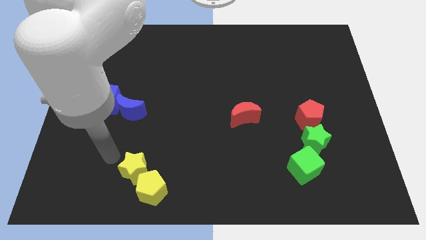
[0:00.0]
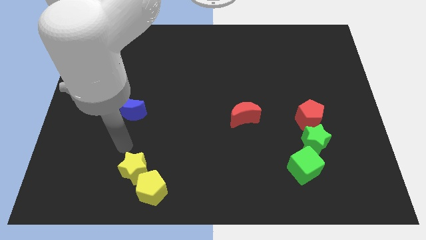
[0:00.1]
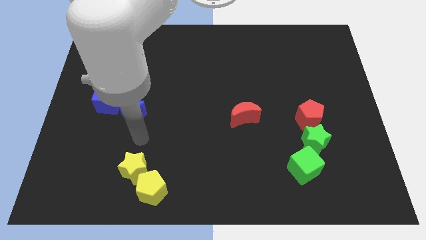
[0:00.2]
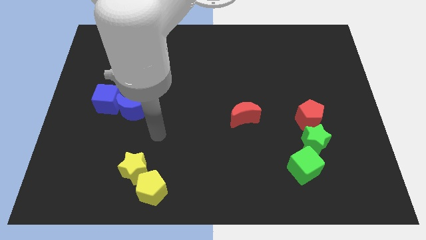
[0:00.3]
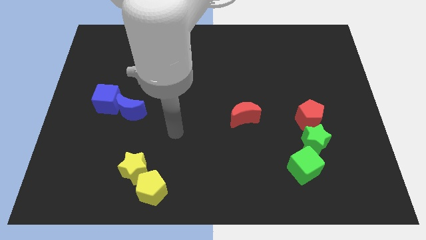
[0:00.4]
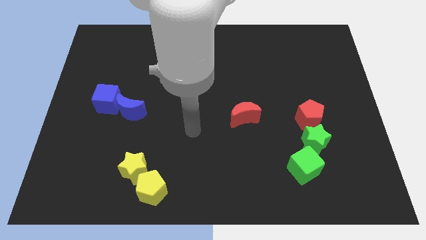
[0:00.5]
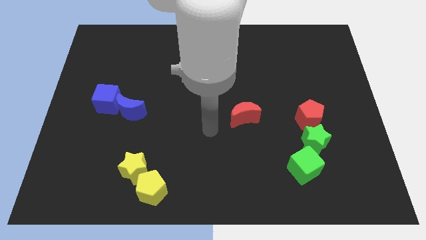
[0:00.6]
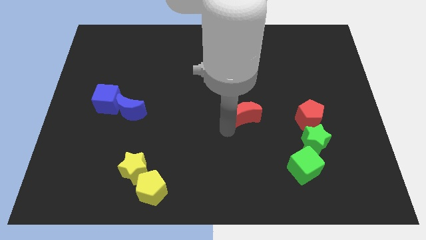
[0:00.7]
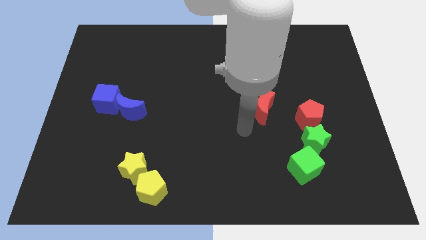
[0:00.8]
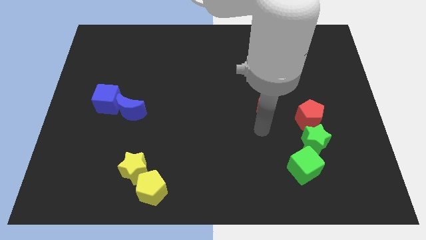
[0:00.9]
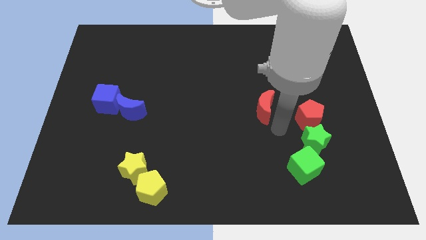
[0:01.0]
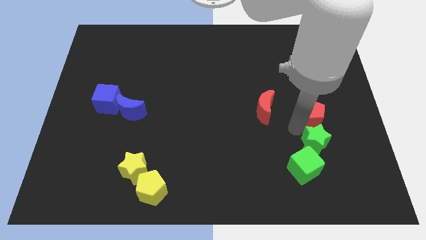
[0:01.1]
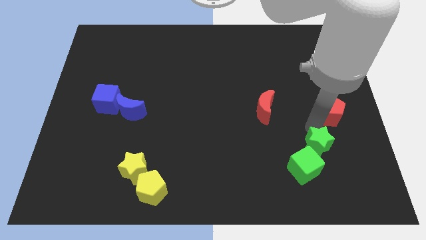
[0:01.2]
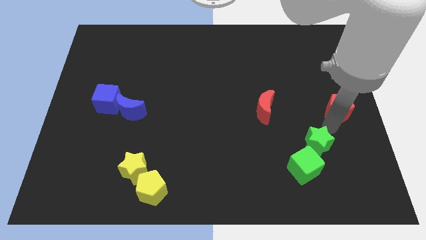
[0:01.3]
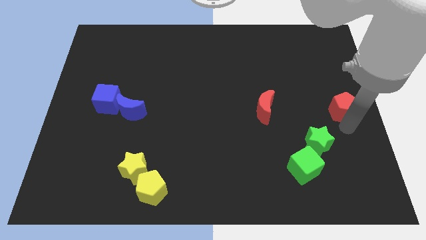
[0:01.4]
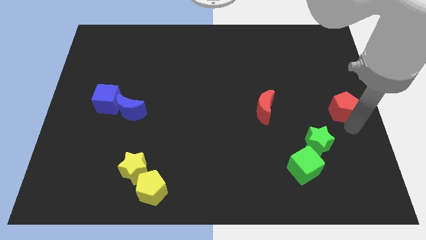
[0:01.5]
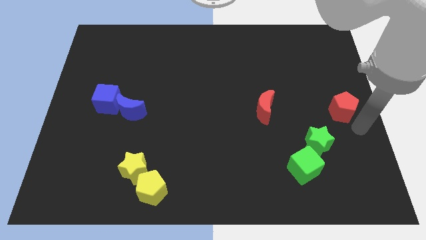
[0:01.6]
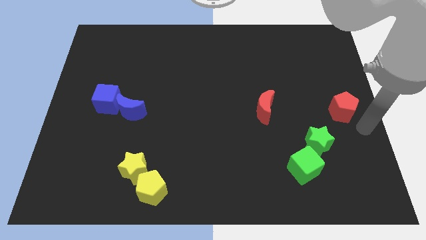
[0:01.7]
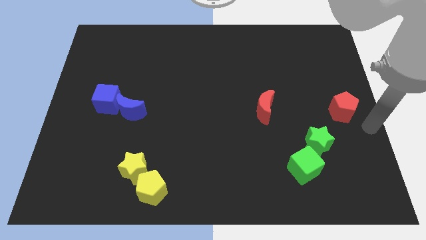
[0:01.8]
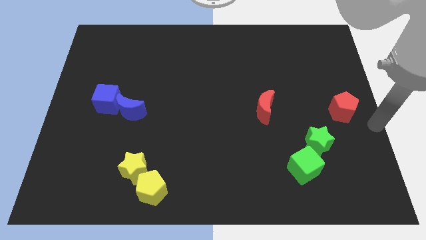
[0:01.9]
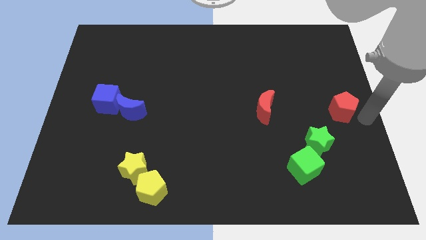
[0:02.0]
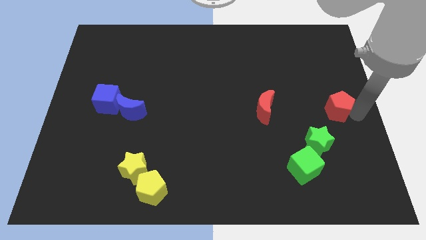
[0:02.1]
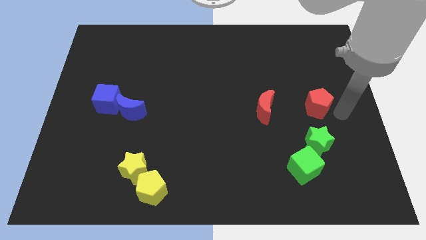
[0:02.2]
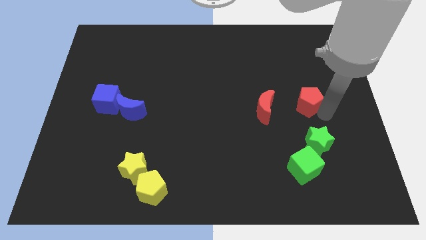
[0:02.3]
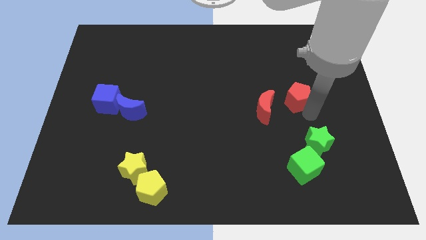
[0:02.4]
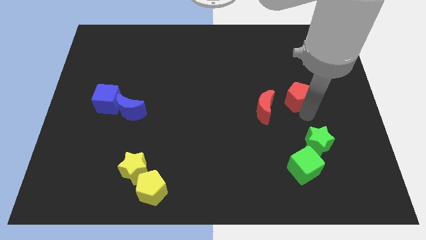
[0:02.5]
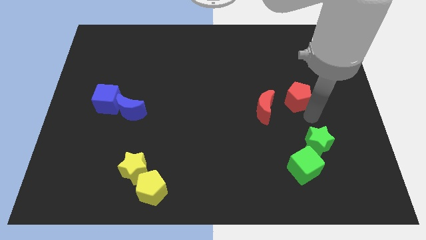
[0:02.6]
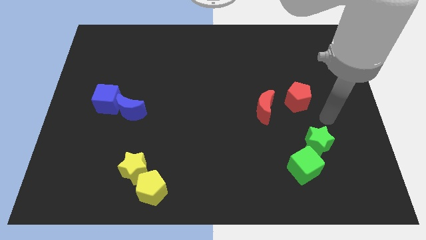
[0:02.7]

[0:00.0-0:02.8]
move the red pentagon to the top right of the red crescent

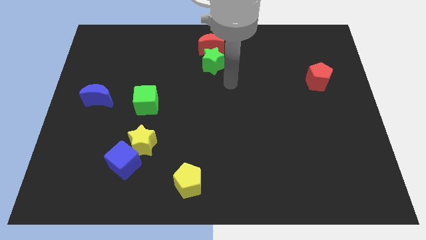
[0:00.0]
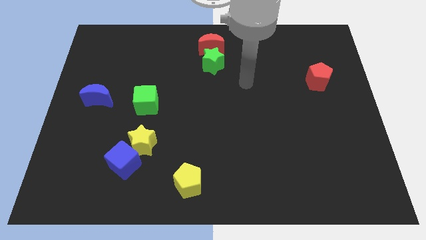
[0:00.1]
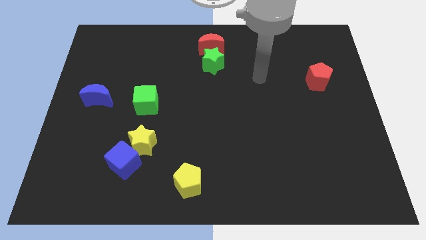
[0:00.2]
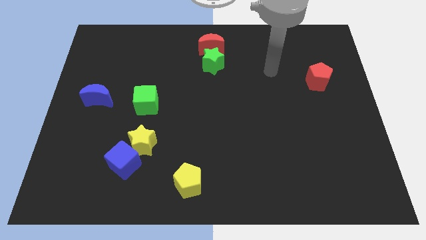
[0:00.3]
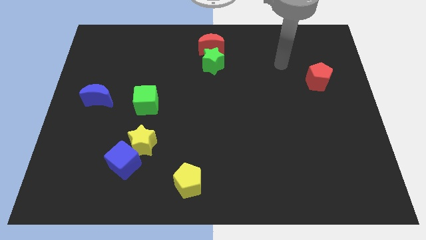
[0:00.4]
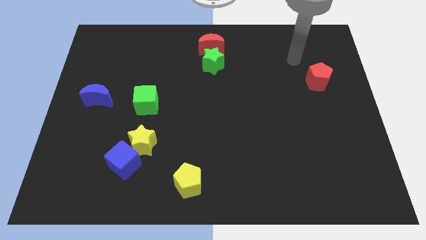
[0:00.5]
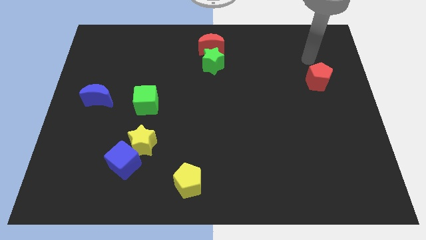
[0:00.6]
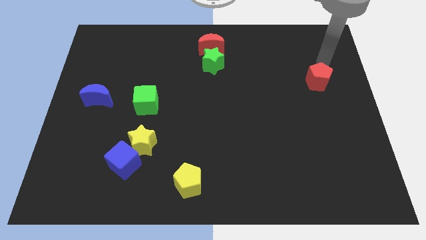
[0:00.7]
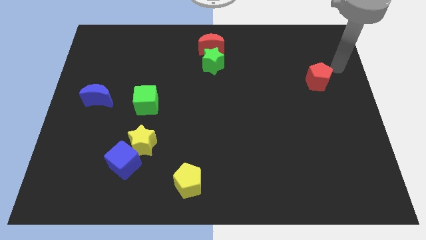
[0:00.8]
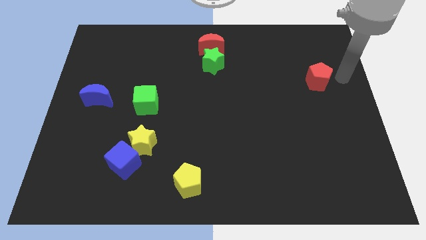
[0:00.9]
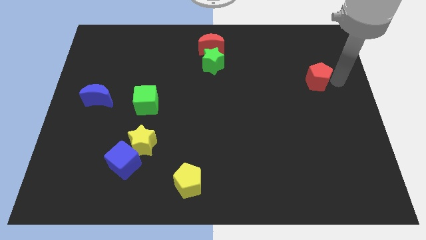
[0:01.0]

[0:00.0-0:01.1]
point your arm at the right of the red pentagon

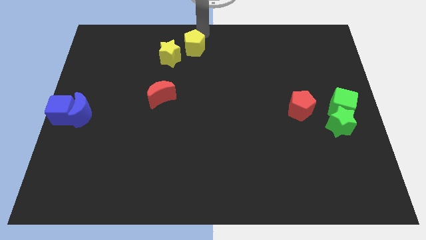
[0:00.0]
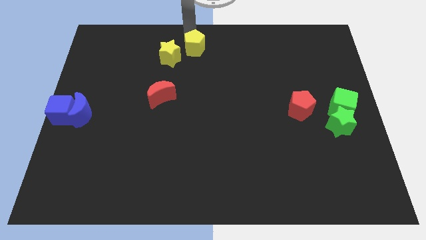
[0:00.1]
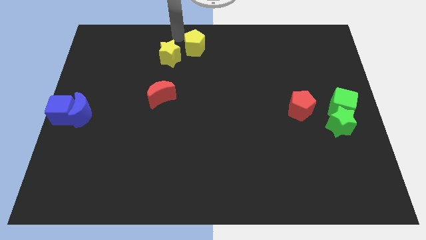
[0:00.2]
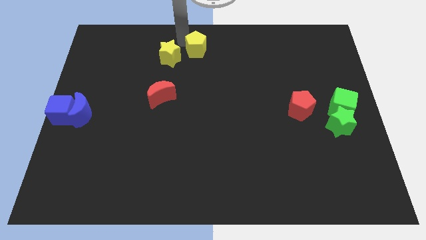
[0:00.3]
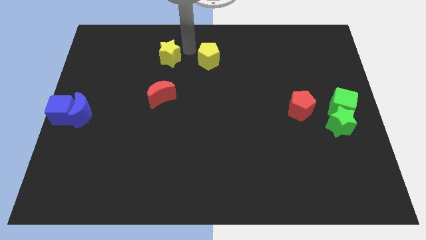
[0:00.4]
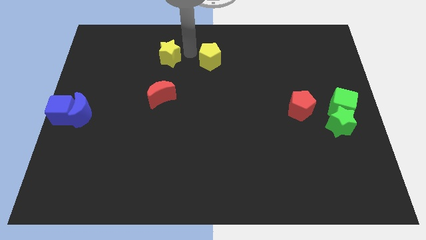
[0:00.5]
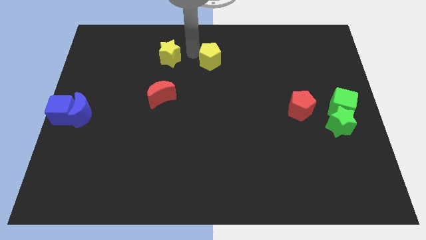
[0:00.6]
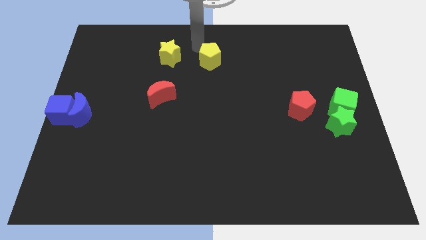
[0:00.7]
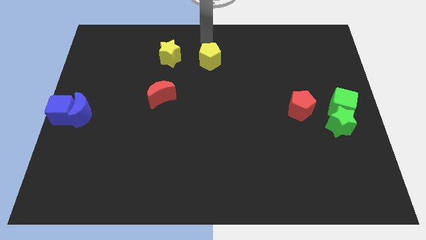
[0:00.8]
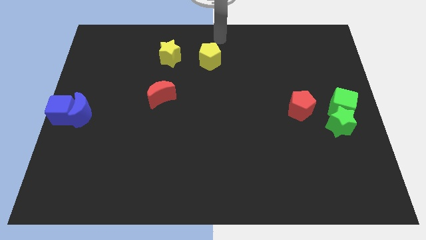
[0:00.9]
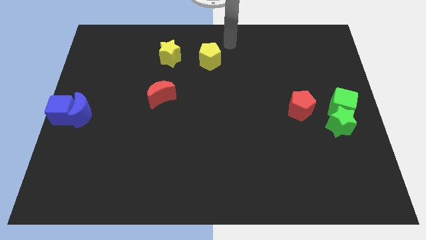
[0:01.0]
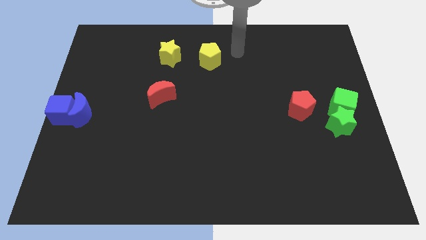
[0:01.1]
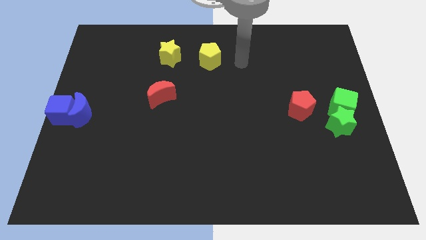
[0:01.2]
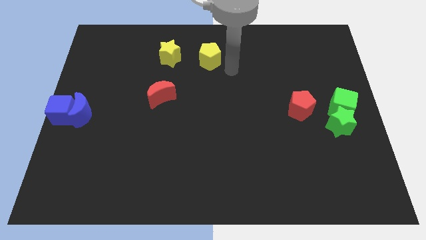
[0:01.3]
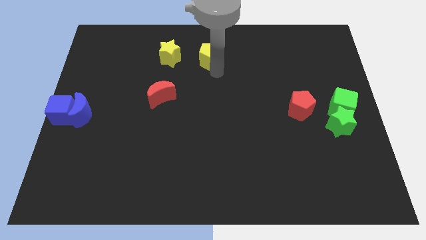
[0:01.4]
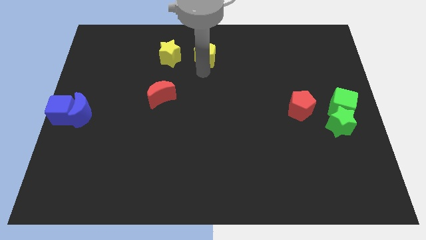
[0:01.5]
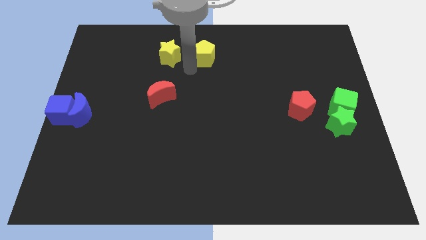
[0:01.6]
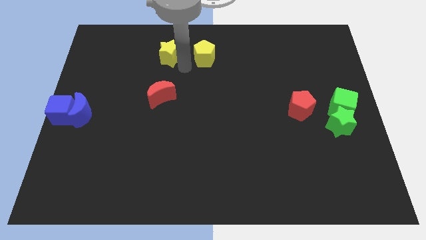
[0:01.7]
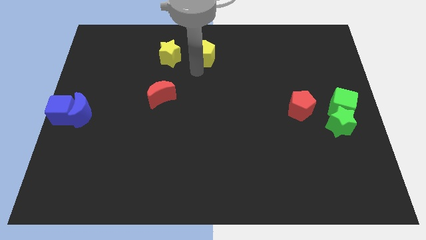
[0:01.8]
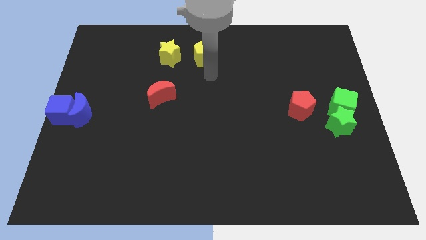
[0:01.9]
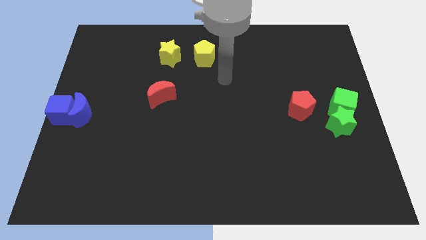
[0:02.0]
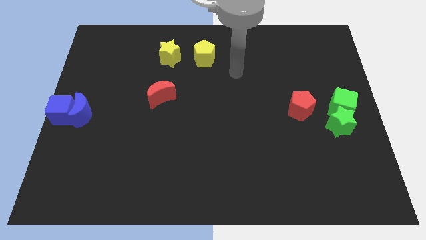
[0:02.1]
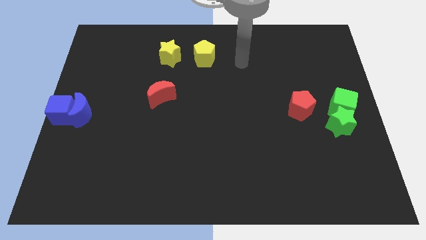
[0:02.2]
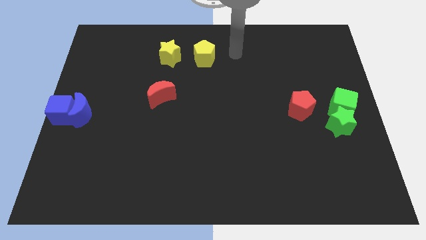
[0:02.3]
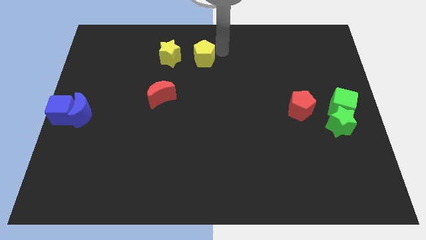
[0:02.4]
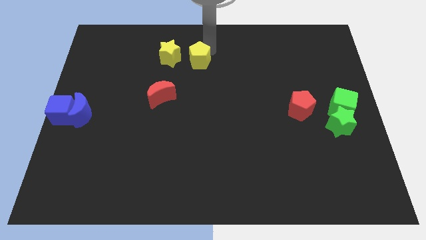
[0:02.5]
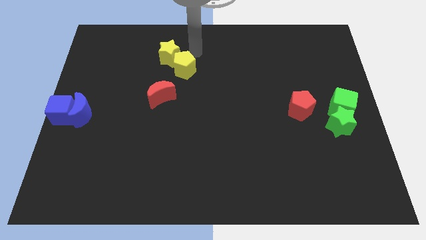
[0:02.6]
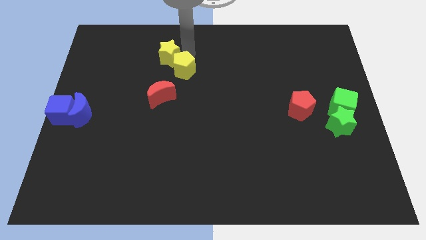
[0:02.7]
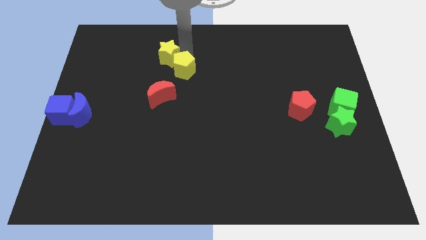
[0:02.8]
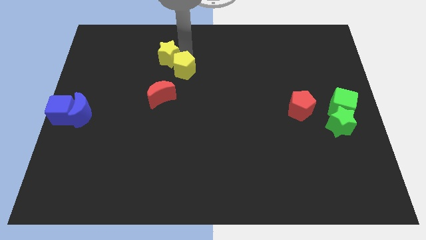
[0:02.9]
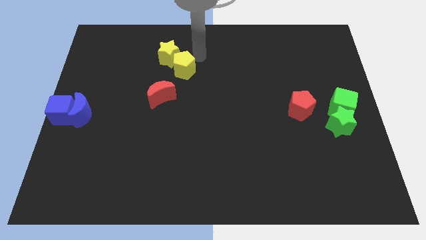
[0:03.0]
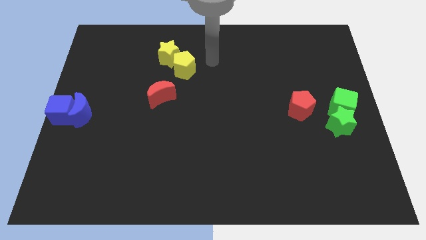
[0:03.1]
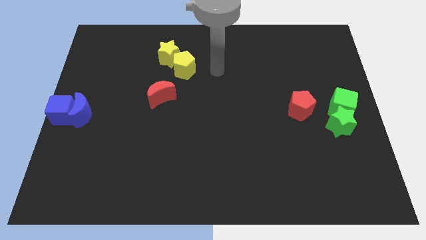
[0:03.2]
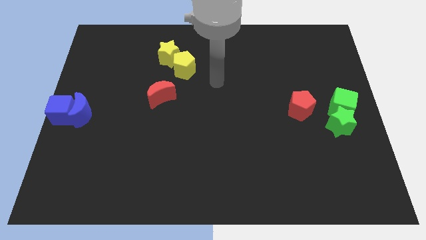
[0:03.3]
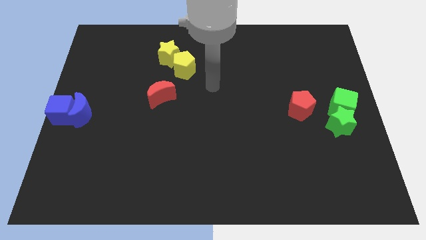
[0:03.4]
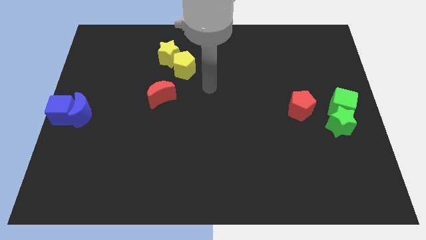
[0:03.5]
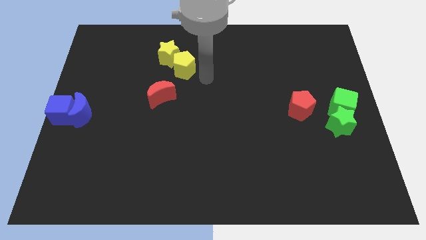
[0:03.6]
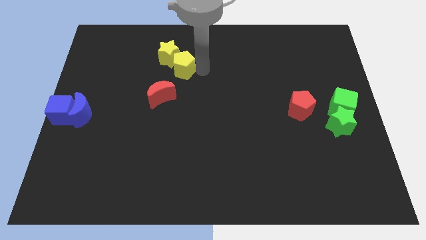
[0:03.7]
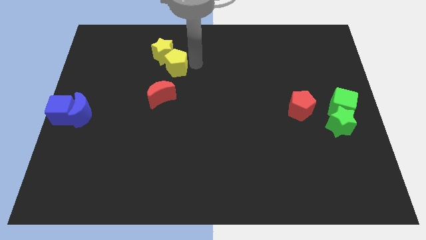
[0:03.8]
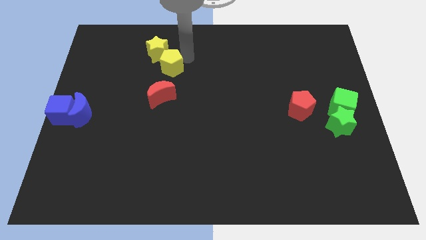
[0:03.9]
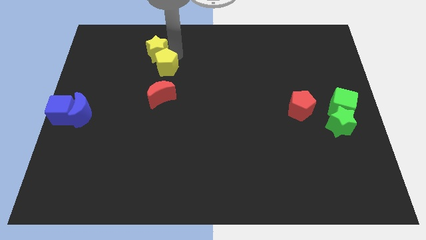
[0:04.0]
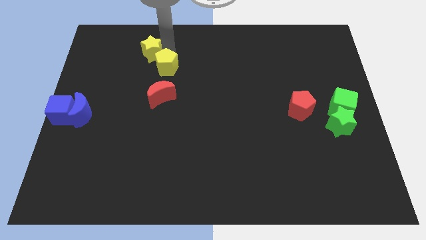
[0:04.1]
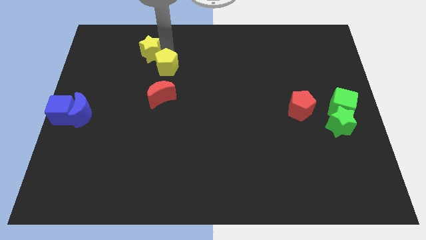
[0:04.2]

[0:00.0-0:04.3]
push the yellow pentagon into the yellow star

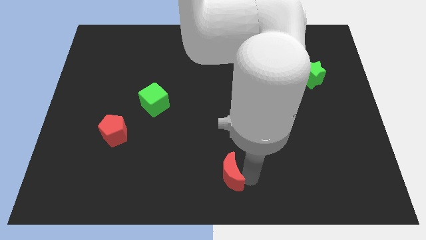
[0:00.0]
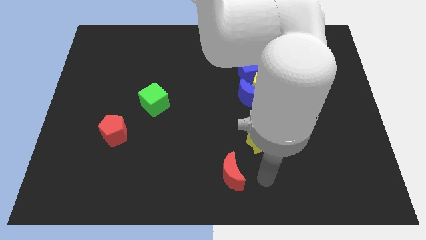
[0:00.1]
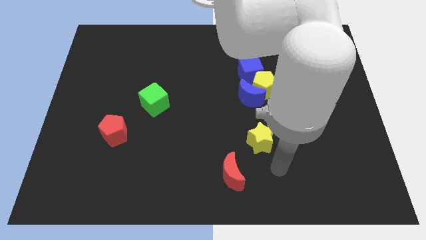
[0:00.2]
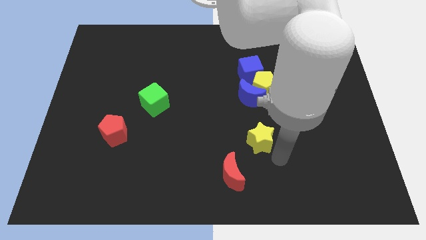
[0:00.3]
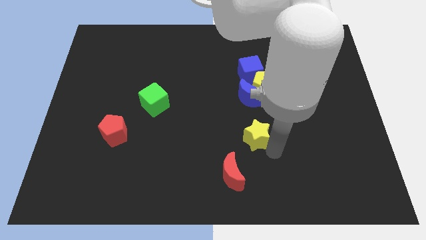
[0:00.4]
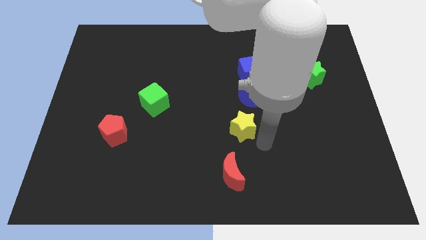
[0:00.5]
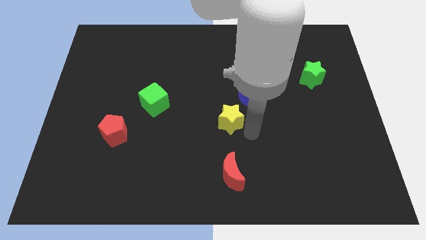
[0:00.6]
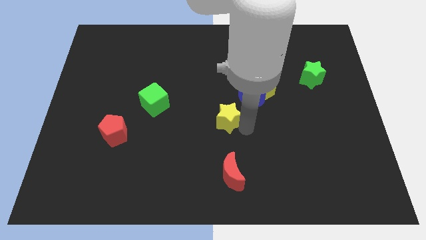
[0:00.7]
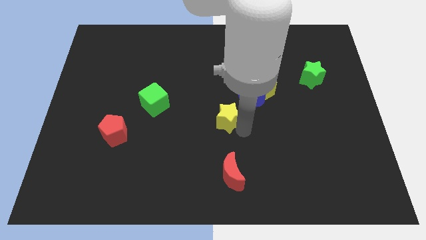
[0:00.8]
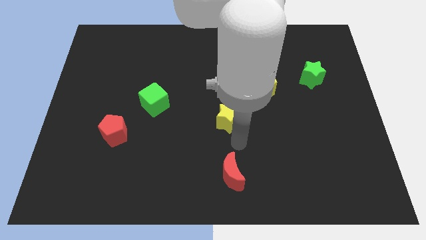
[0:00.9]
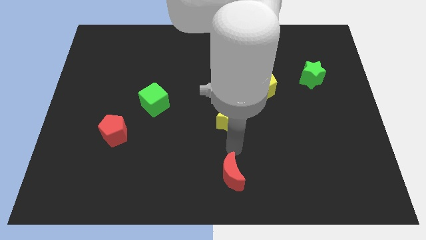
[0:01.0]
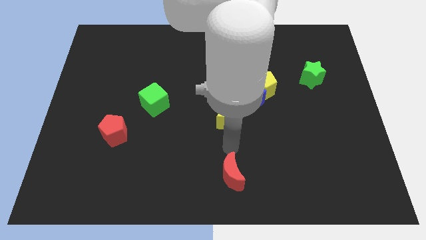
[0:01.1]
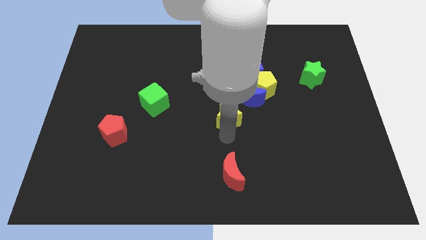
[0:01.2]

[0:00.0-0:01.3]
move the yellow star to the center of the board
